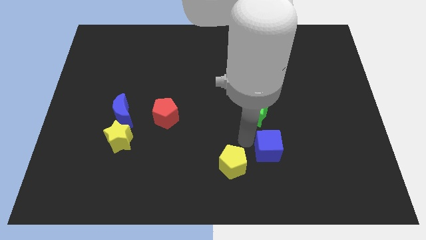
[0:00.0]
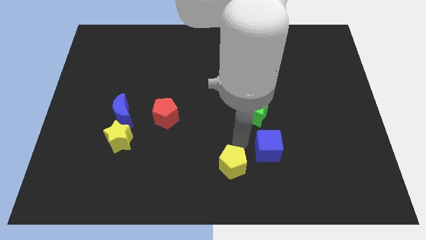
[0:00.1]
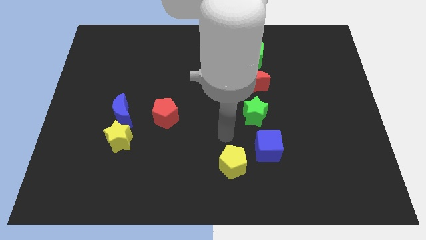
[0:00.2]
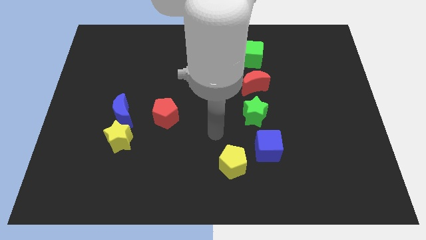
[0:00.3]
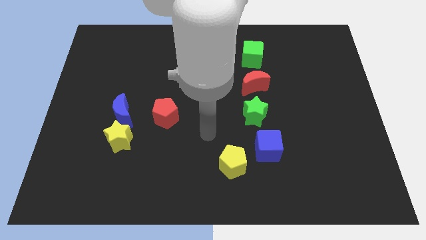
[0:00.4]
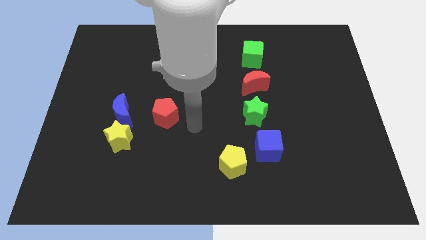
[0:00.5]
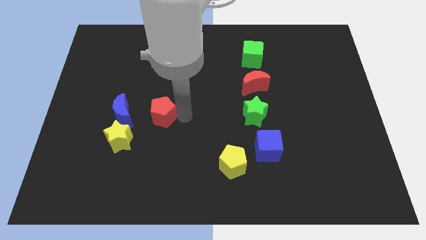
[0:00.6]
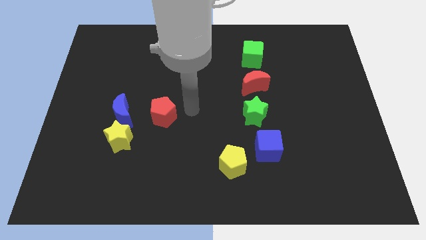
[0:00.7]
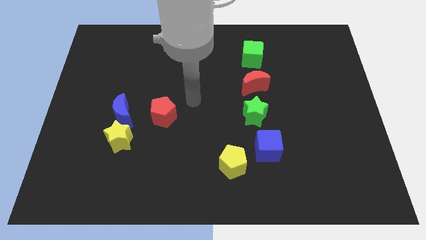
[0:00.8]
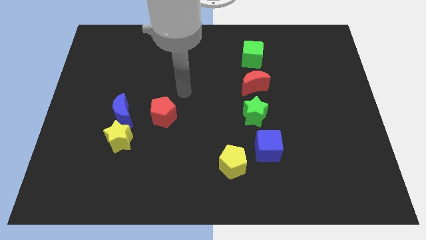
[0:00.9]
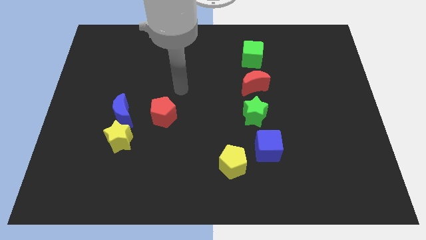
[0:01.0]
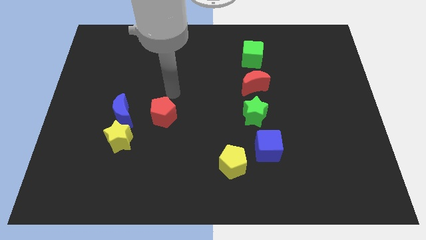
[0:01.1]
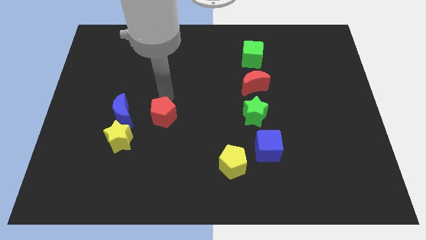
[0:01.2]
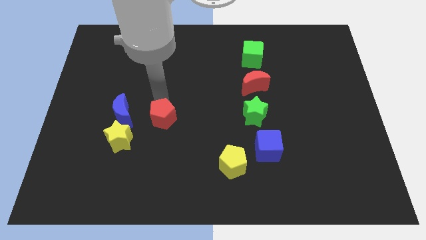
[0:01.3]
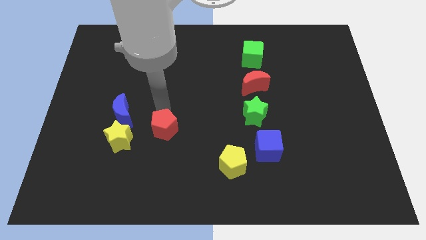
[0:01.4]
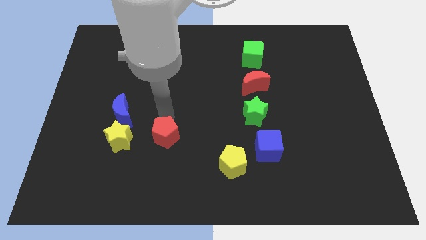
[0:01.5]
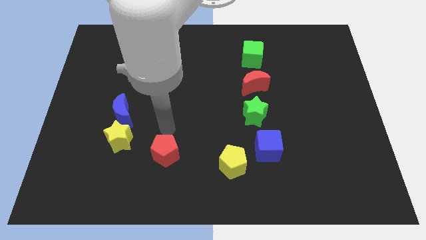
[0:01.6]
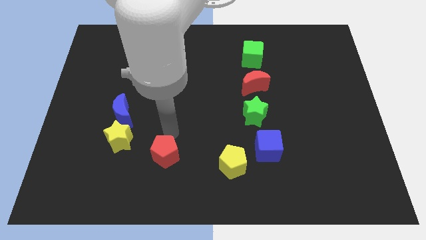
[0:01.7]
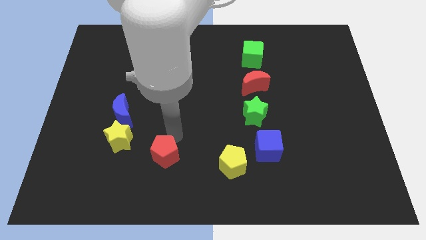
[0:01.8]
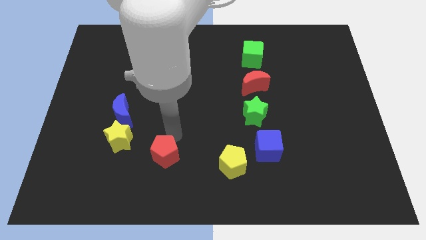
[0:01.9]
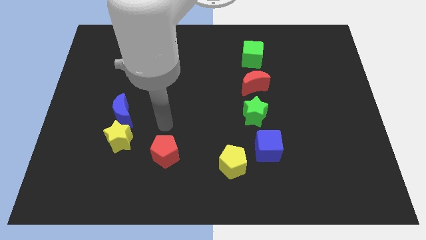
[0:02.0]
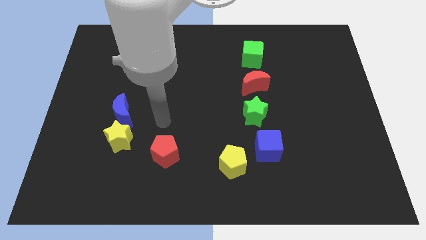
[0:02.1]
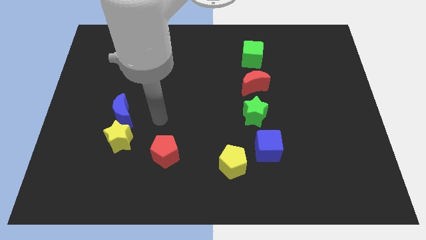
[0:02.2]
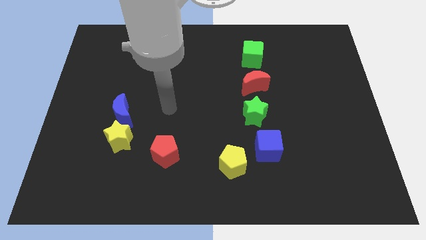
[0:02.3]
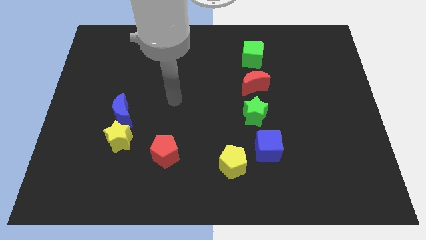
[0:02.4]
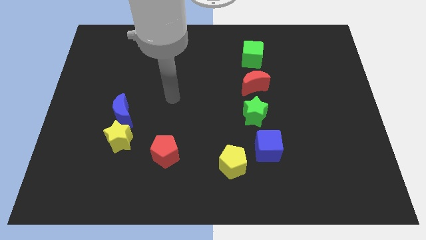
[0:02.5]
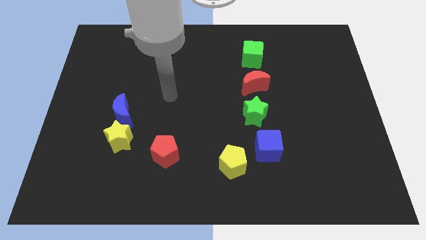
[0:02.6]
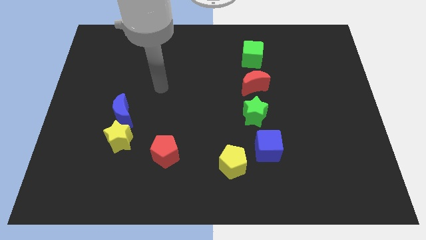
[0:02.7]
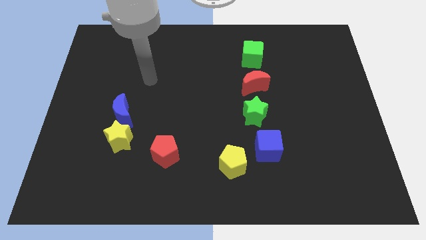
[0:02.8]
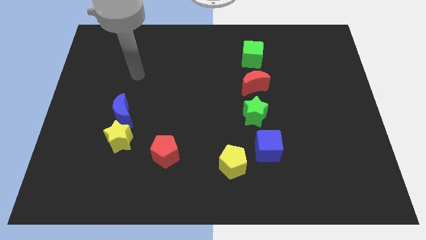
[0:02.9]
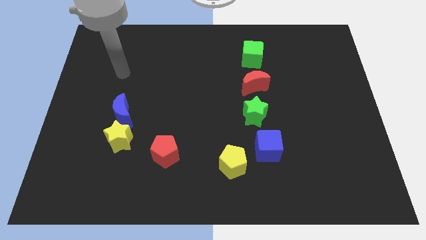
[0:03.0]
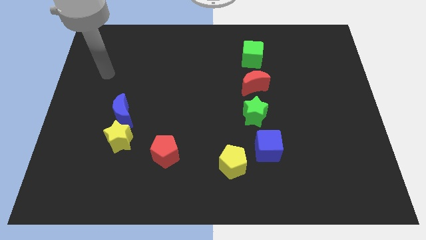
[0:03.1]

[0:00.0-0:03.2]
move the red pentagon to the bottom right of the blue crescent

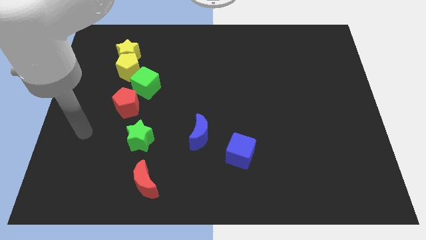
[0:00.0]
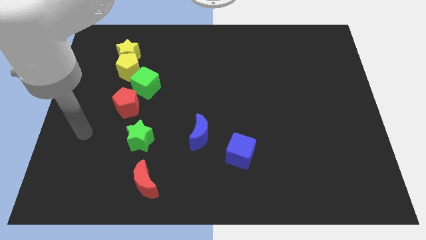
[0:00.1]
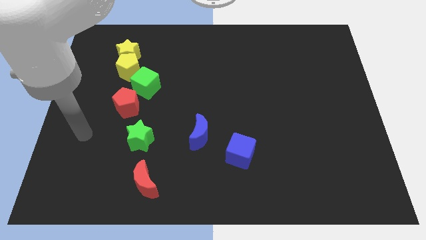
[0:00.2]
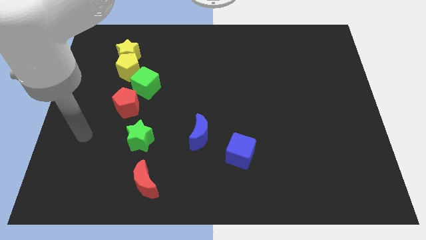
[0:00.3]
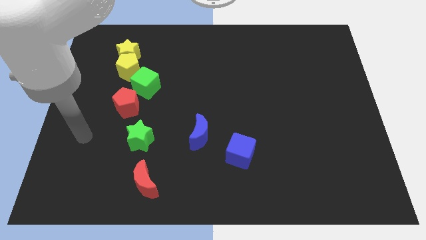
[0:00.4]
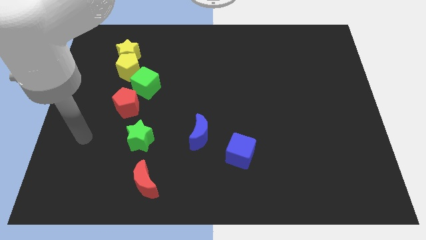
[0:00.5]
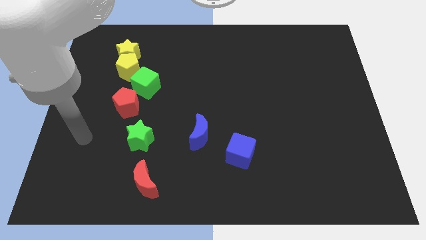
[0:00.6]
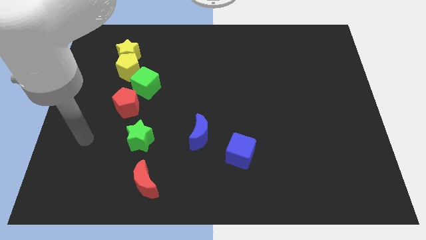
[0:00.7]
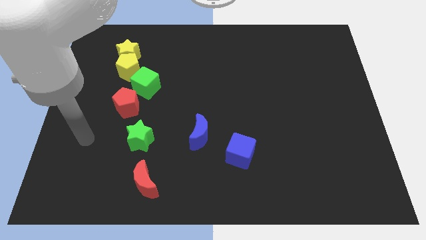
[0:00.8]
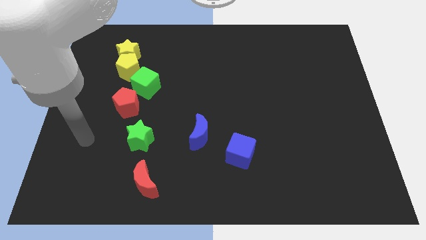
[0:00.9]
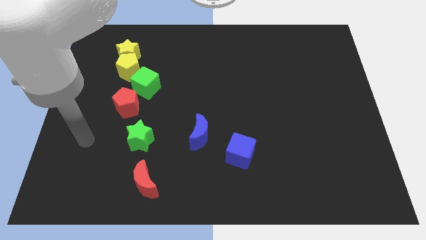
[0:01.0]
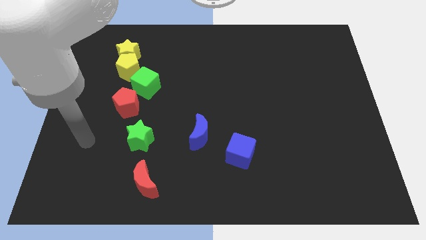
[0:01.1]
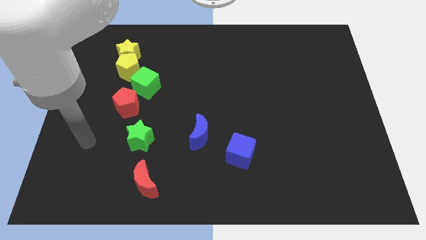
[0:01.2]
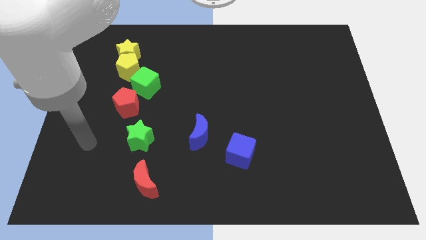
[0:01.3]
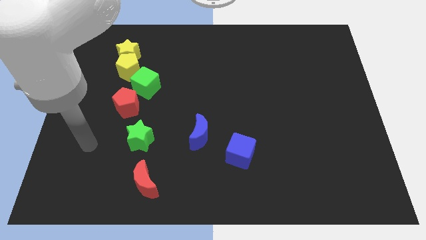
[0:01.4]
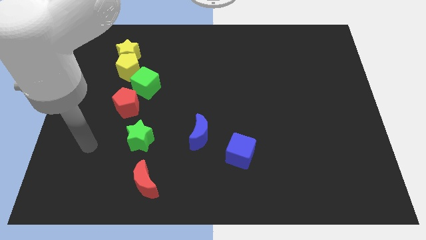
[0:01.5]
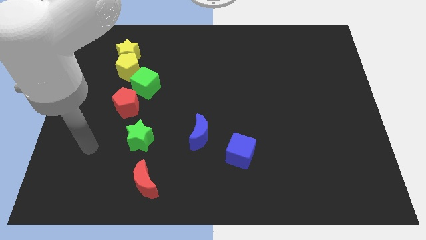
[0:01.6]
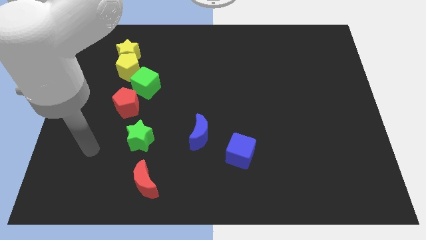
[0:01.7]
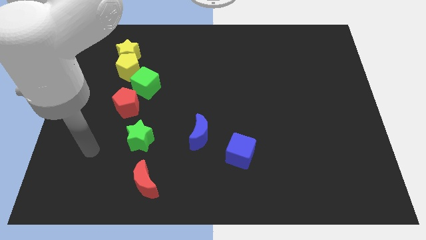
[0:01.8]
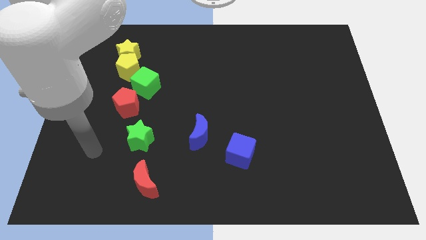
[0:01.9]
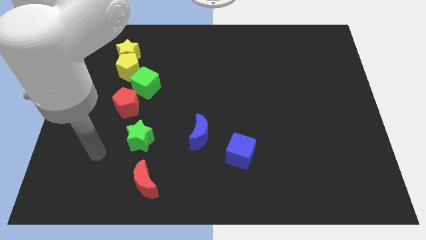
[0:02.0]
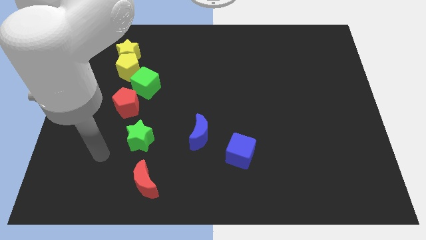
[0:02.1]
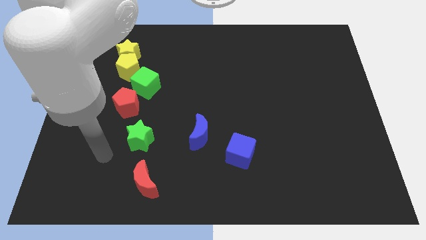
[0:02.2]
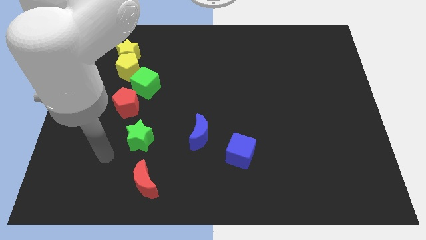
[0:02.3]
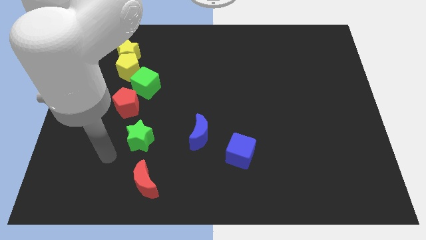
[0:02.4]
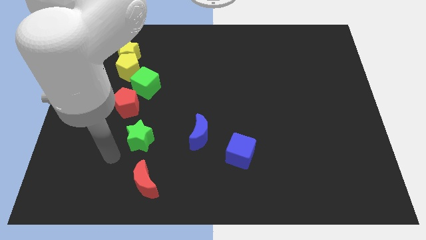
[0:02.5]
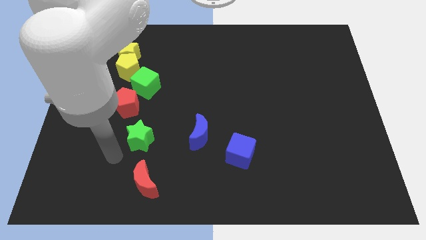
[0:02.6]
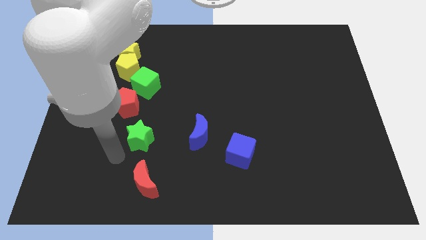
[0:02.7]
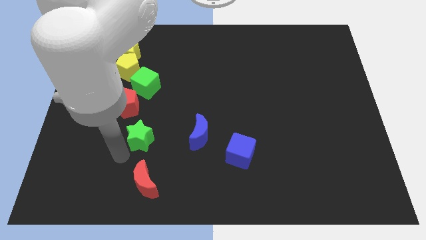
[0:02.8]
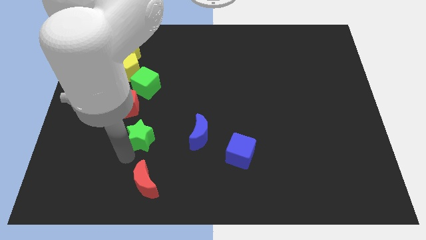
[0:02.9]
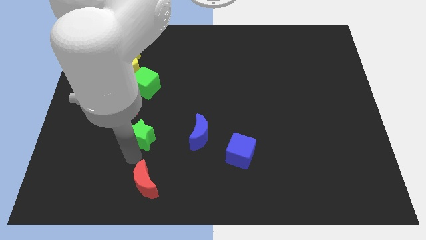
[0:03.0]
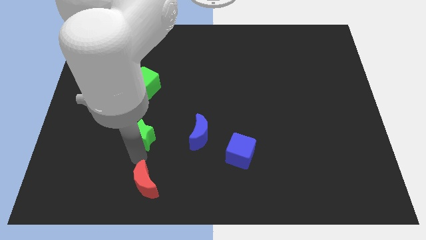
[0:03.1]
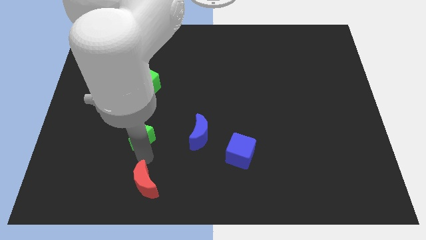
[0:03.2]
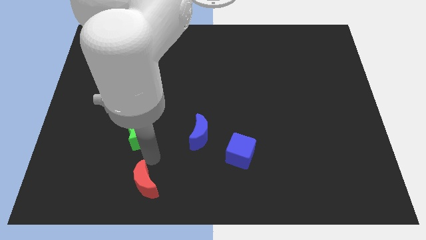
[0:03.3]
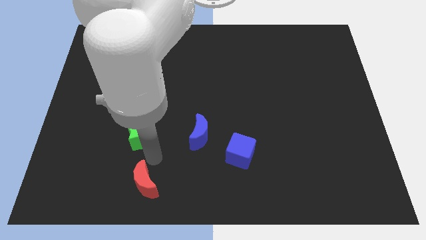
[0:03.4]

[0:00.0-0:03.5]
go and touch the bottom side of the green star

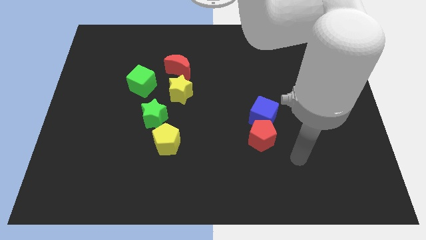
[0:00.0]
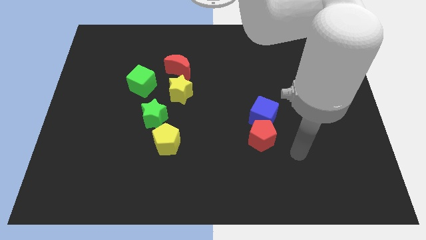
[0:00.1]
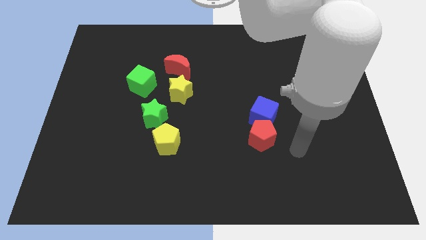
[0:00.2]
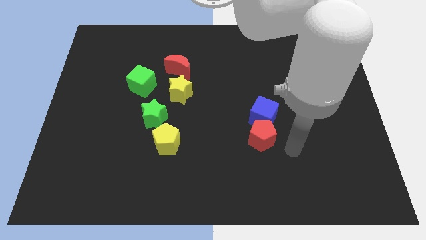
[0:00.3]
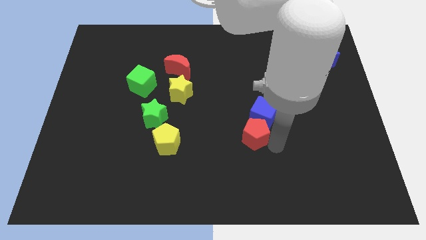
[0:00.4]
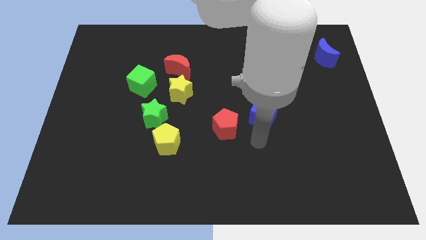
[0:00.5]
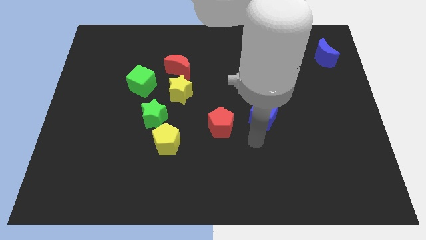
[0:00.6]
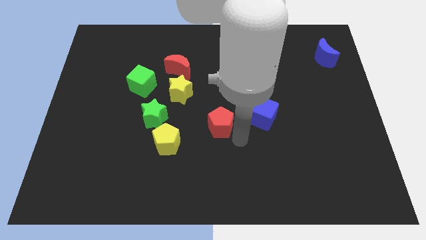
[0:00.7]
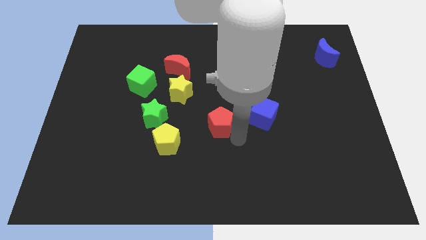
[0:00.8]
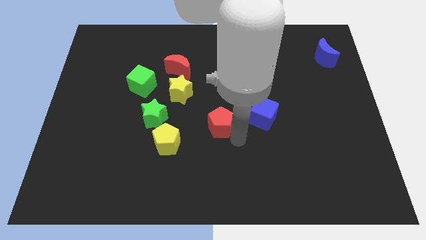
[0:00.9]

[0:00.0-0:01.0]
separate red pentagon from blue cube

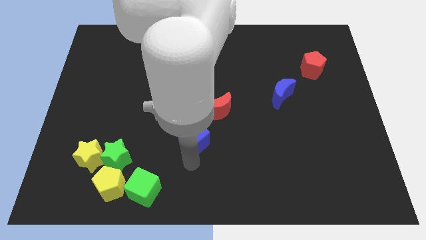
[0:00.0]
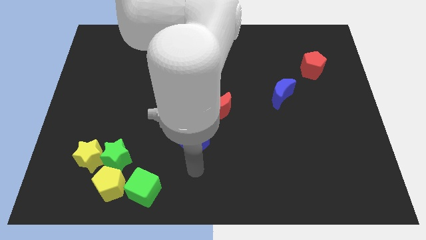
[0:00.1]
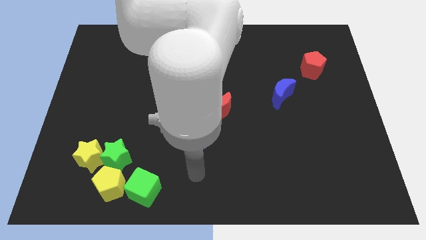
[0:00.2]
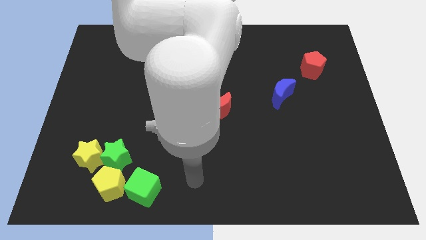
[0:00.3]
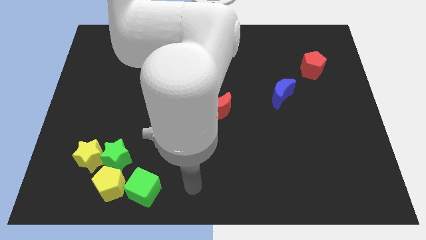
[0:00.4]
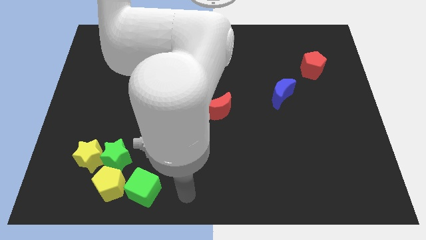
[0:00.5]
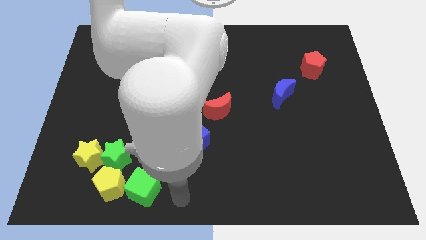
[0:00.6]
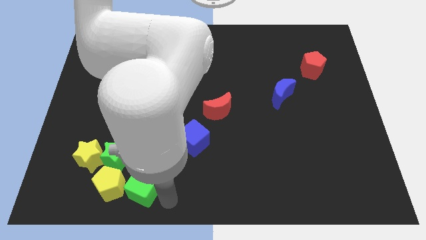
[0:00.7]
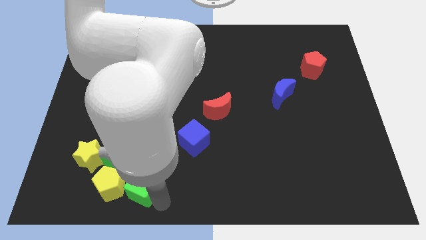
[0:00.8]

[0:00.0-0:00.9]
touch the right side of the green cube

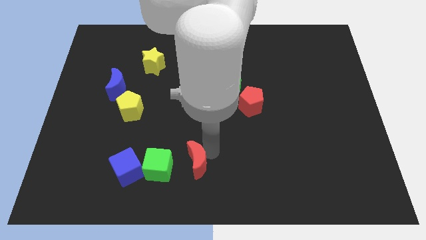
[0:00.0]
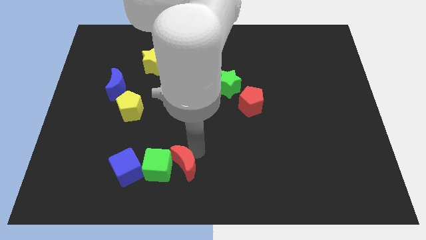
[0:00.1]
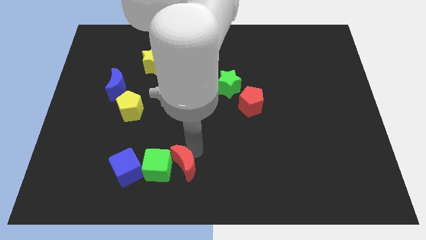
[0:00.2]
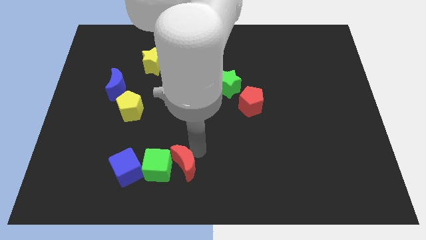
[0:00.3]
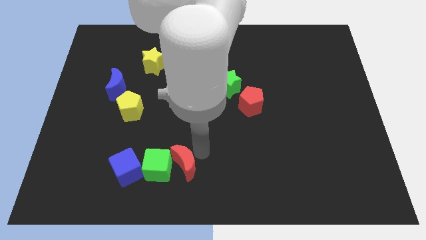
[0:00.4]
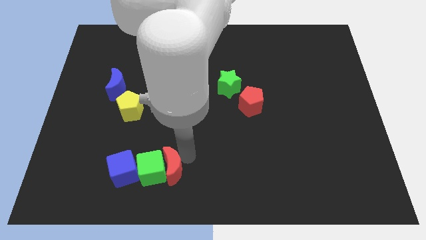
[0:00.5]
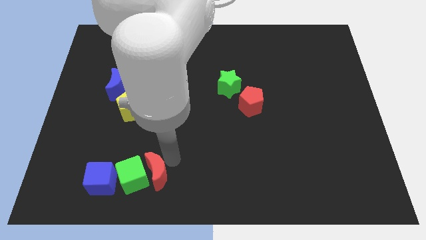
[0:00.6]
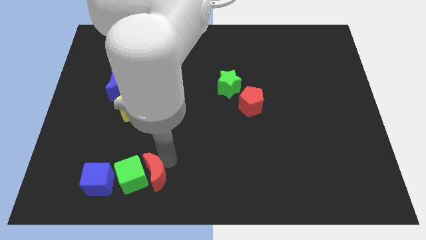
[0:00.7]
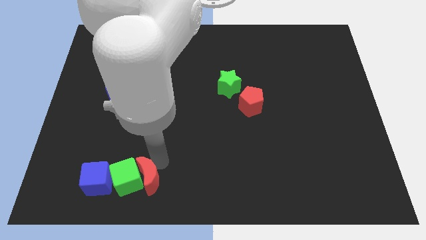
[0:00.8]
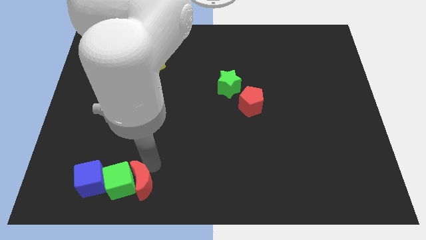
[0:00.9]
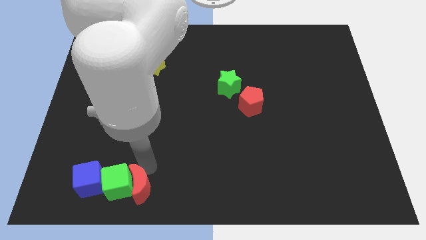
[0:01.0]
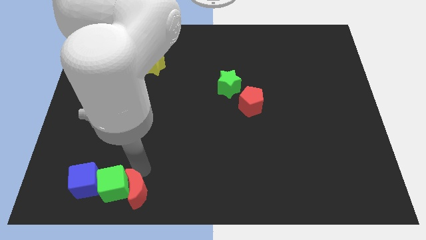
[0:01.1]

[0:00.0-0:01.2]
move the red moon into the green cube
